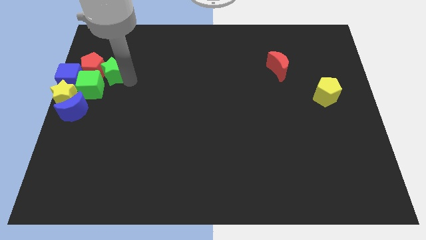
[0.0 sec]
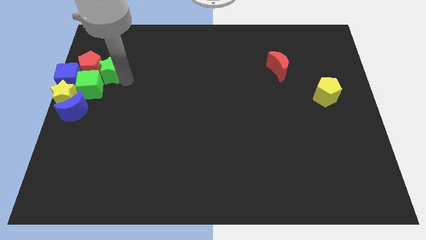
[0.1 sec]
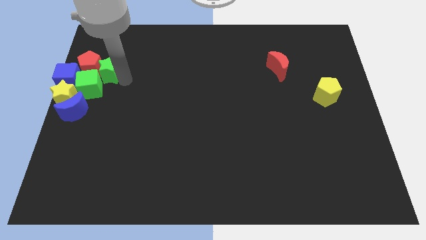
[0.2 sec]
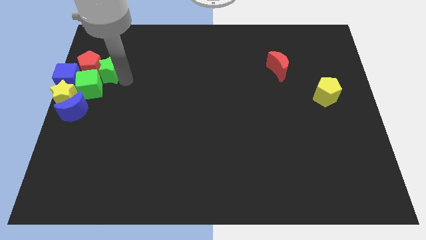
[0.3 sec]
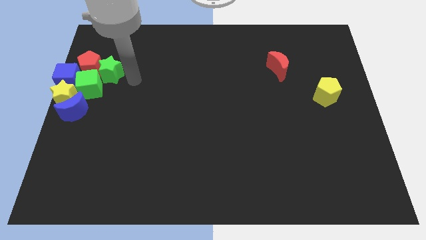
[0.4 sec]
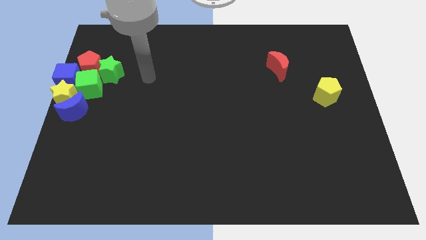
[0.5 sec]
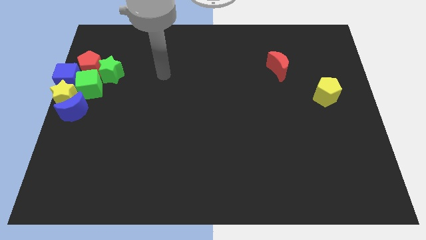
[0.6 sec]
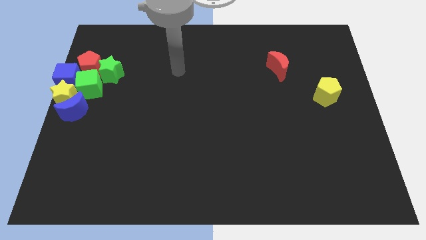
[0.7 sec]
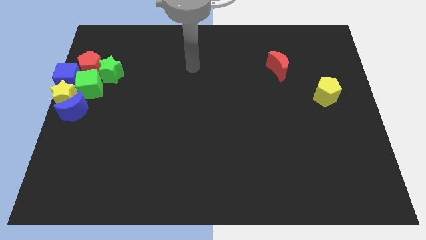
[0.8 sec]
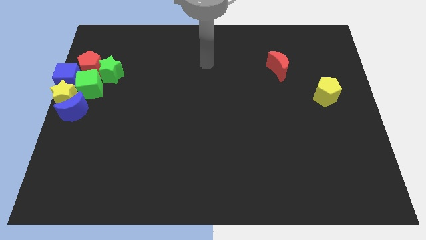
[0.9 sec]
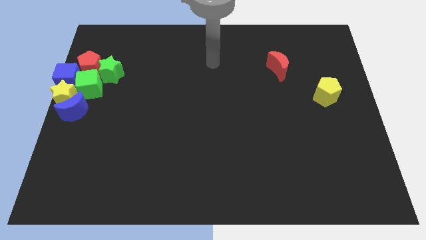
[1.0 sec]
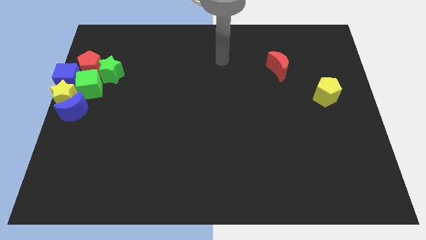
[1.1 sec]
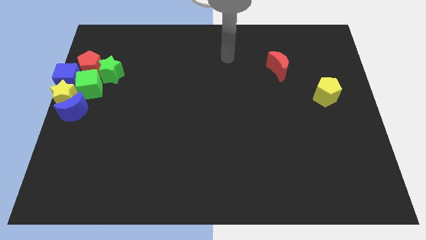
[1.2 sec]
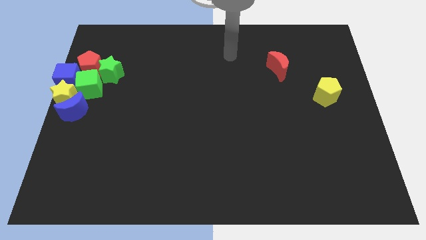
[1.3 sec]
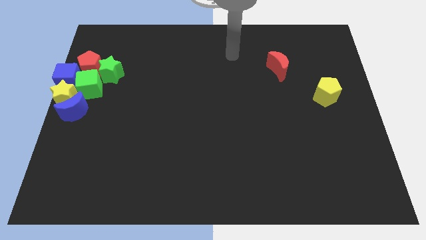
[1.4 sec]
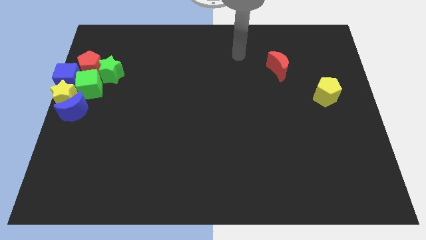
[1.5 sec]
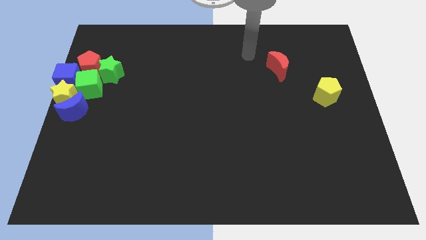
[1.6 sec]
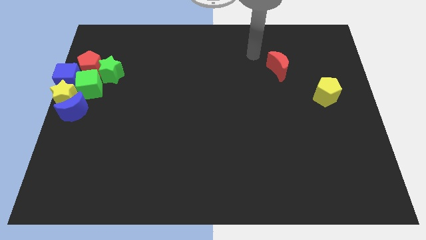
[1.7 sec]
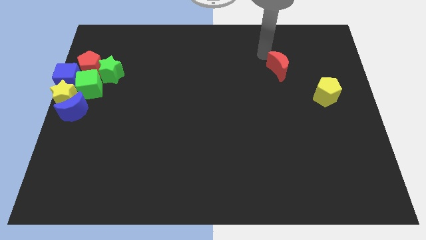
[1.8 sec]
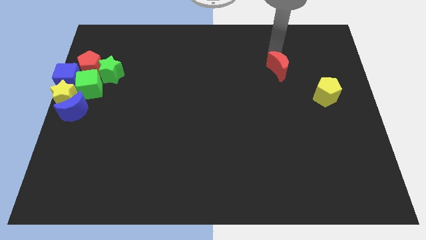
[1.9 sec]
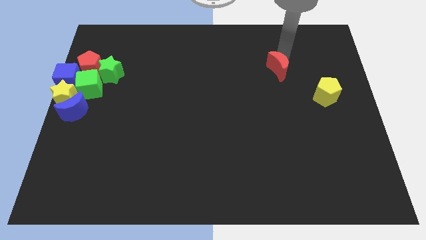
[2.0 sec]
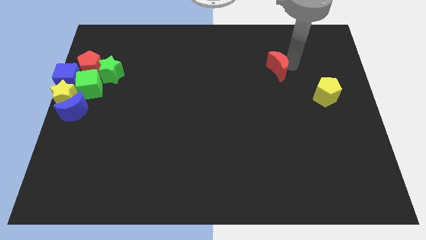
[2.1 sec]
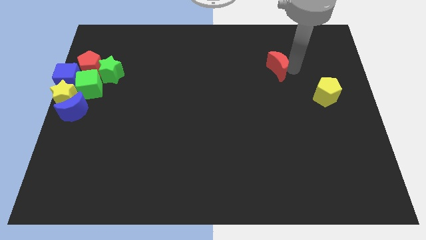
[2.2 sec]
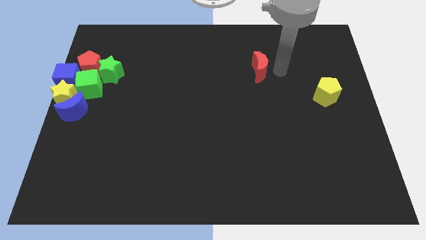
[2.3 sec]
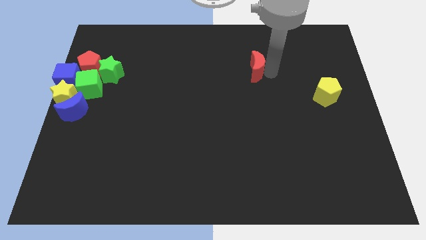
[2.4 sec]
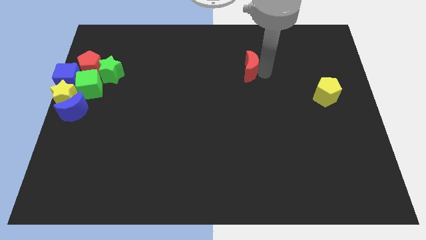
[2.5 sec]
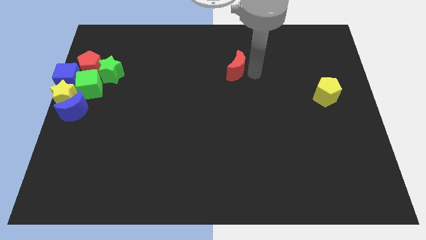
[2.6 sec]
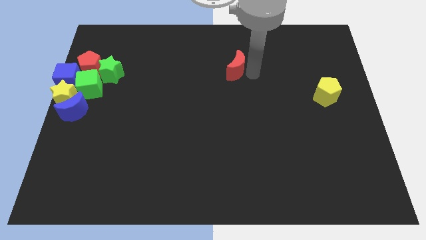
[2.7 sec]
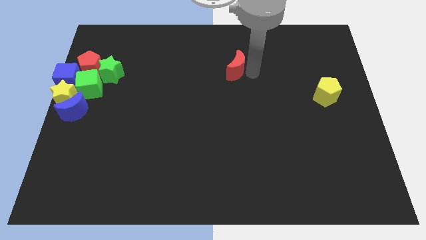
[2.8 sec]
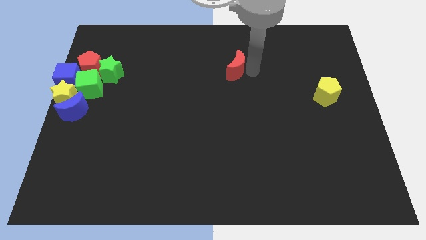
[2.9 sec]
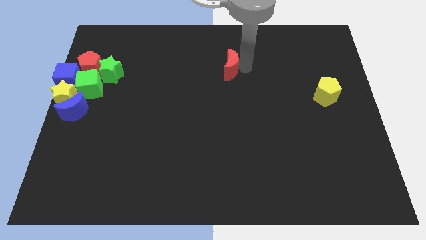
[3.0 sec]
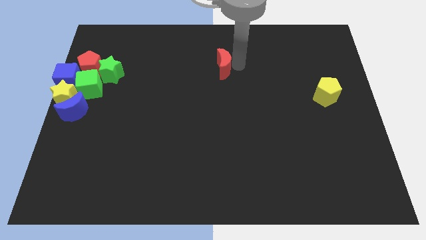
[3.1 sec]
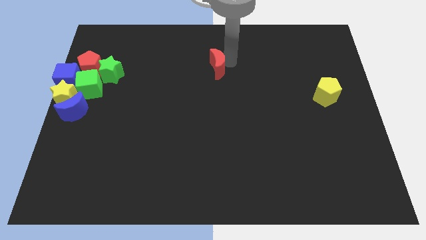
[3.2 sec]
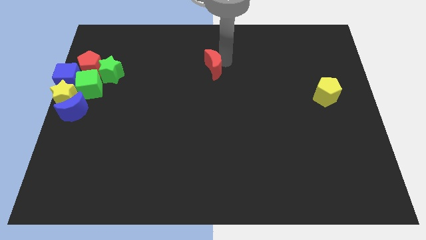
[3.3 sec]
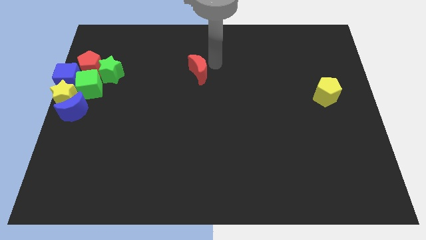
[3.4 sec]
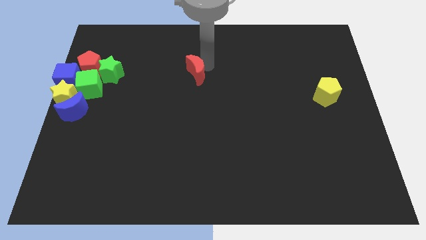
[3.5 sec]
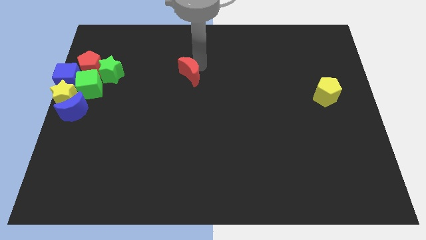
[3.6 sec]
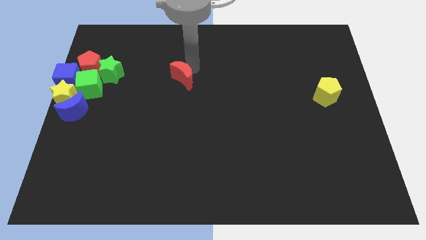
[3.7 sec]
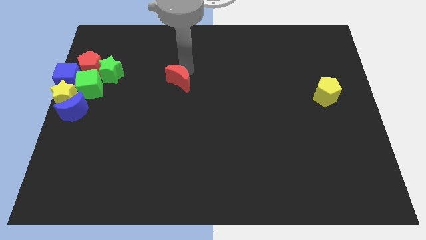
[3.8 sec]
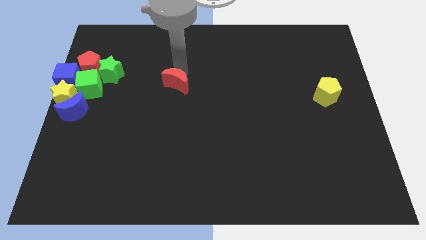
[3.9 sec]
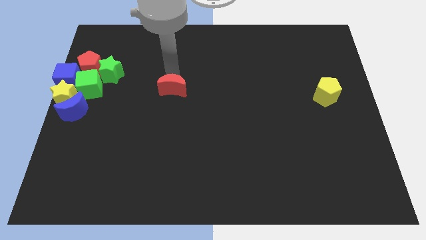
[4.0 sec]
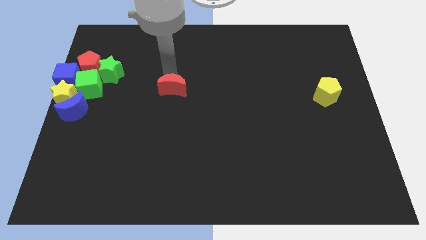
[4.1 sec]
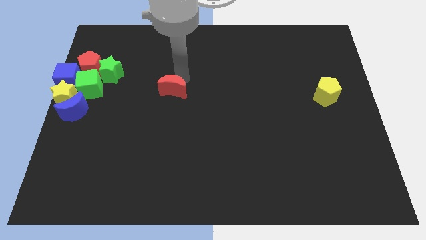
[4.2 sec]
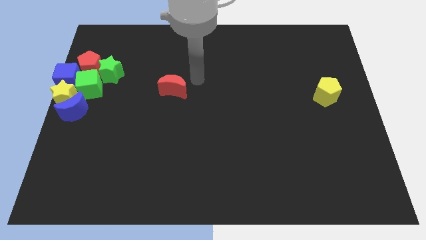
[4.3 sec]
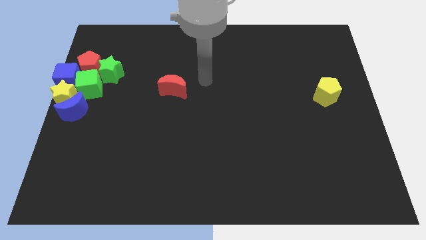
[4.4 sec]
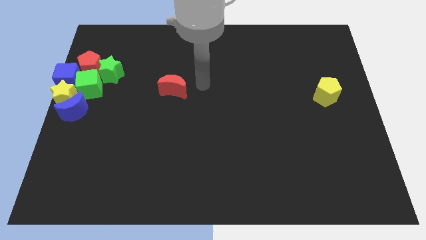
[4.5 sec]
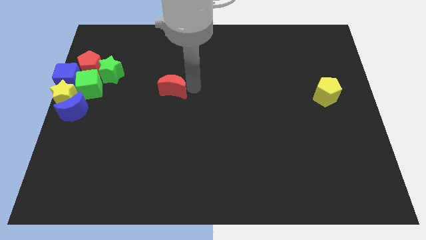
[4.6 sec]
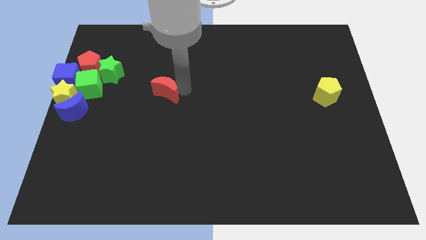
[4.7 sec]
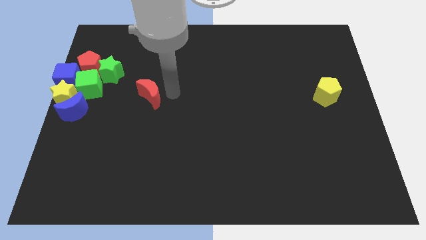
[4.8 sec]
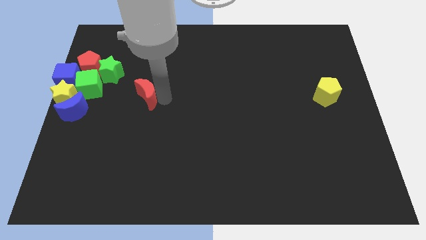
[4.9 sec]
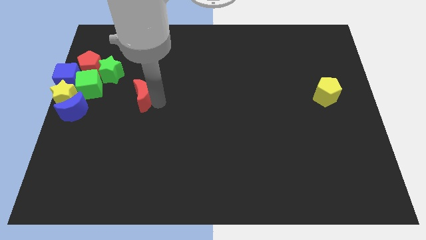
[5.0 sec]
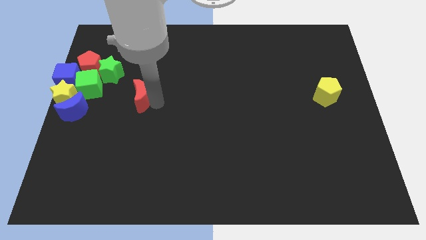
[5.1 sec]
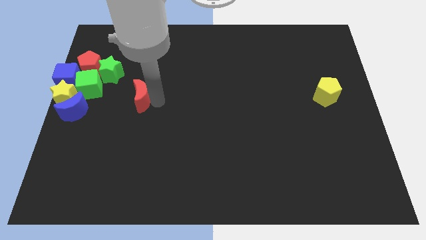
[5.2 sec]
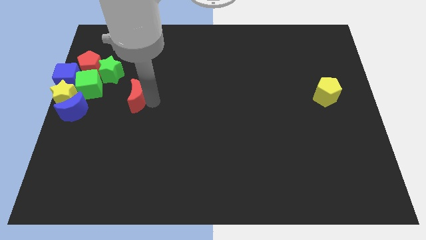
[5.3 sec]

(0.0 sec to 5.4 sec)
move the red crescent close right to the green cube

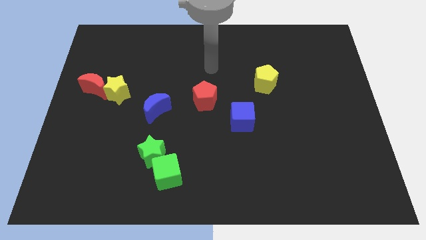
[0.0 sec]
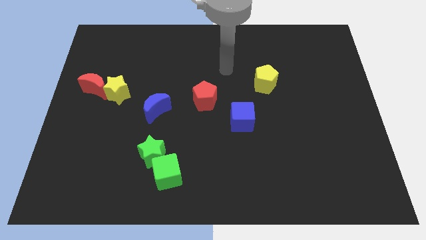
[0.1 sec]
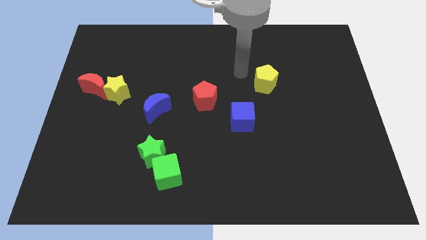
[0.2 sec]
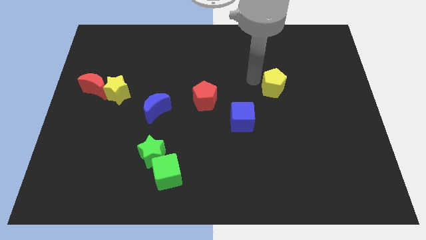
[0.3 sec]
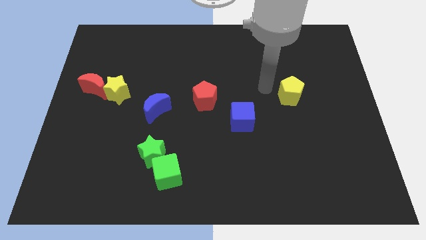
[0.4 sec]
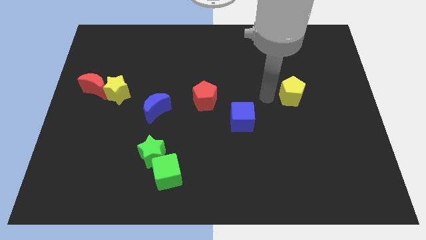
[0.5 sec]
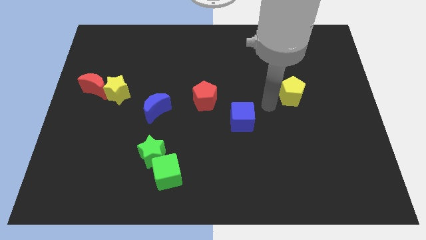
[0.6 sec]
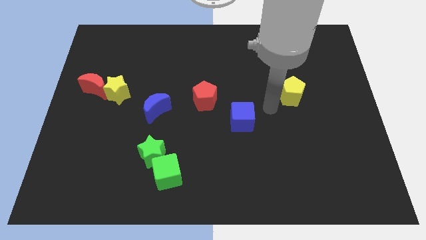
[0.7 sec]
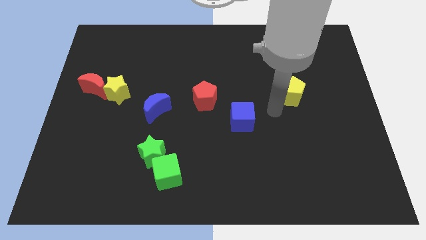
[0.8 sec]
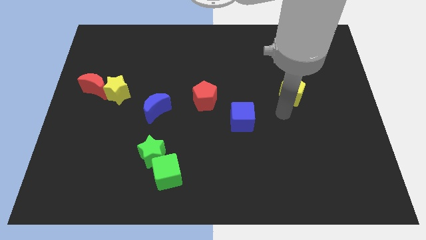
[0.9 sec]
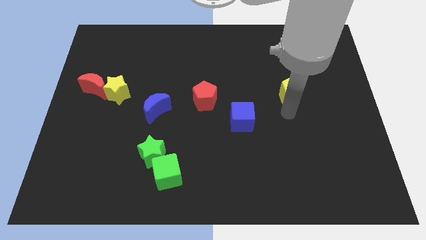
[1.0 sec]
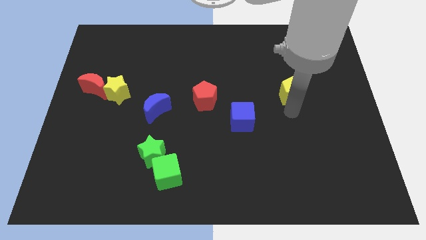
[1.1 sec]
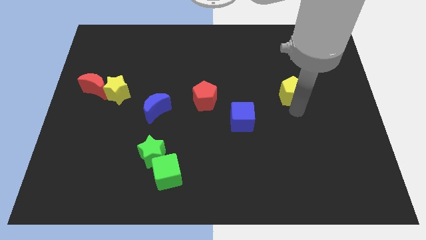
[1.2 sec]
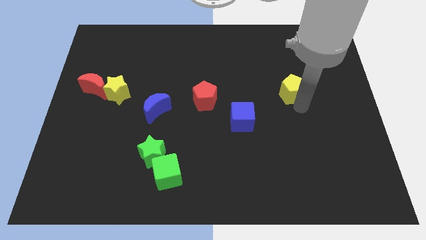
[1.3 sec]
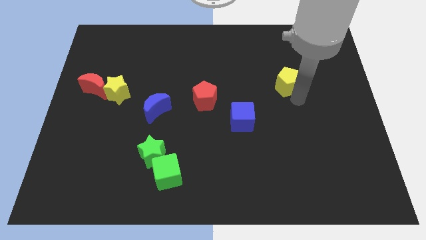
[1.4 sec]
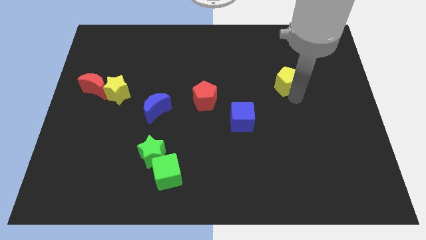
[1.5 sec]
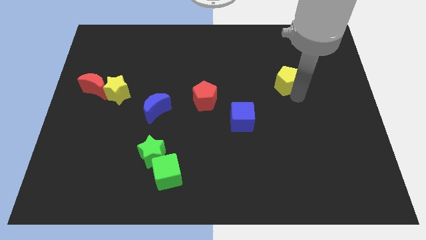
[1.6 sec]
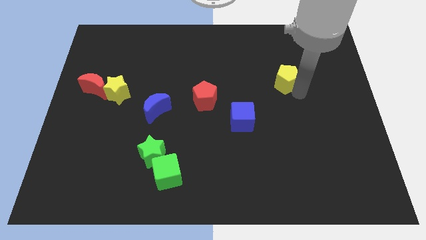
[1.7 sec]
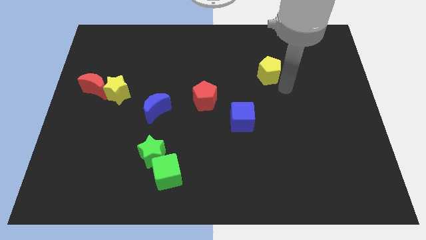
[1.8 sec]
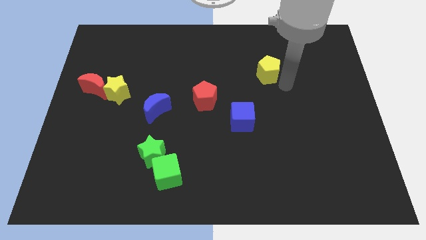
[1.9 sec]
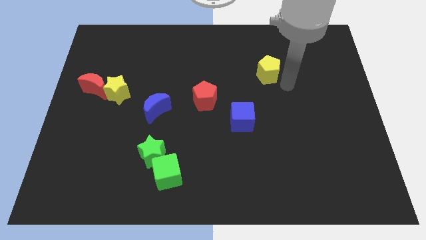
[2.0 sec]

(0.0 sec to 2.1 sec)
push the yellow pentagon slightly to the top side of the board

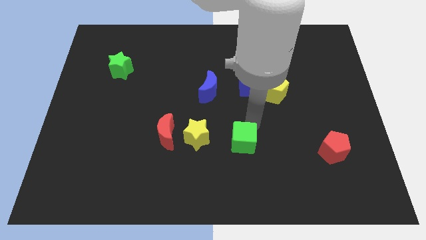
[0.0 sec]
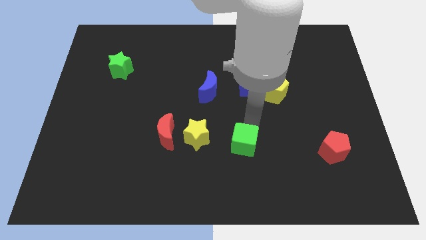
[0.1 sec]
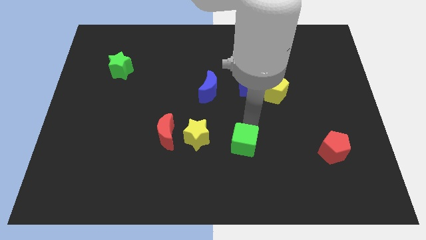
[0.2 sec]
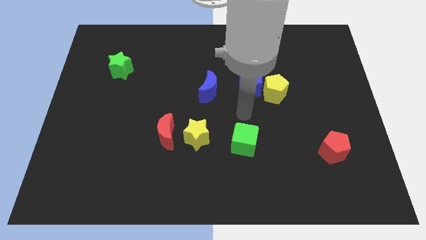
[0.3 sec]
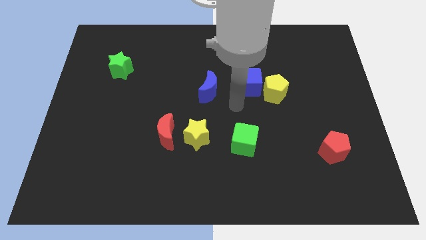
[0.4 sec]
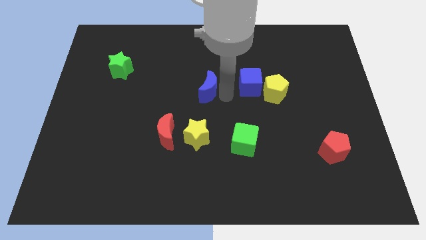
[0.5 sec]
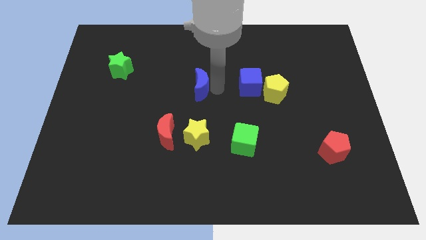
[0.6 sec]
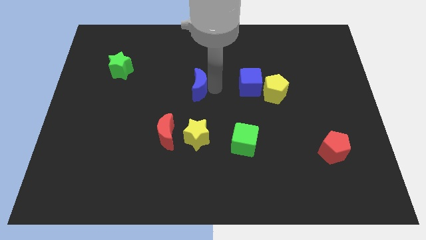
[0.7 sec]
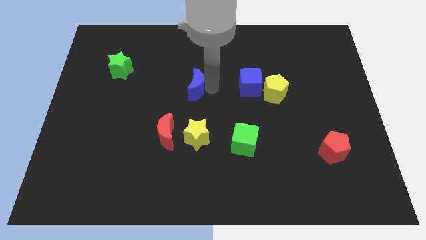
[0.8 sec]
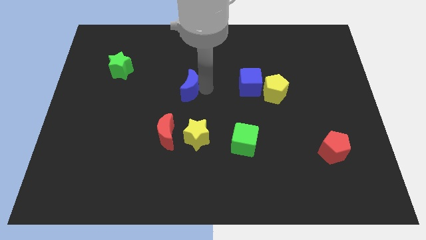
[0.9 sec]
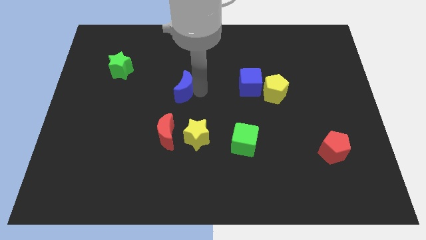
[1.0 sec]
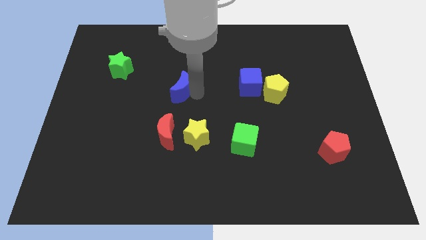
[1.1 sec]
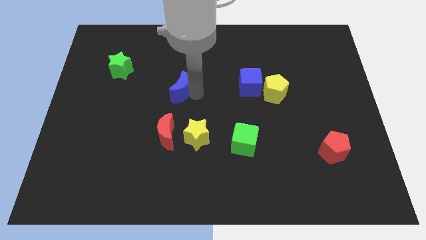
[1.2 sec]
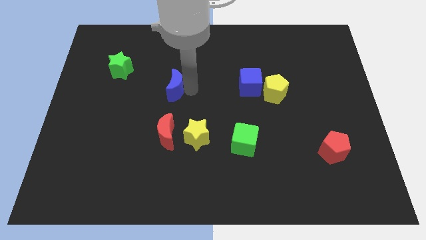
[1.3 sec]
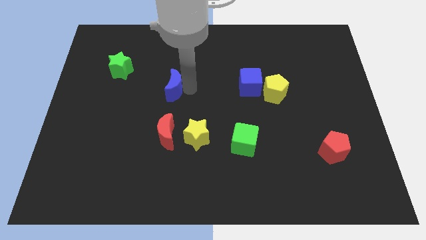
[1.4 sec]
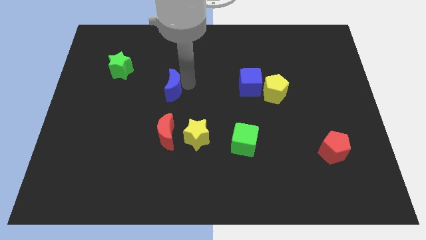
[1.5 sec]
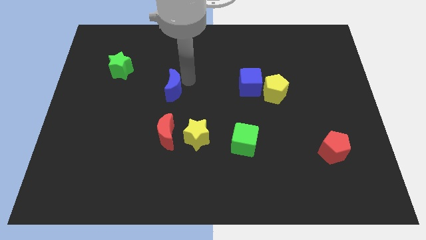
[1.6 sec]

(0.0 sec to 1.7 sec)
move the blue crescent to the top of red crescent
